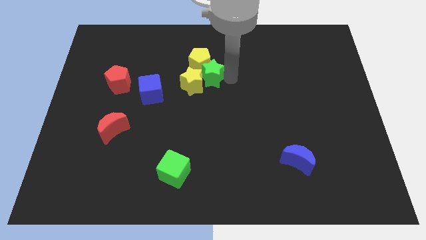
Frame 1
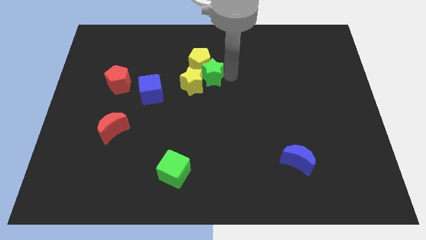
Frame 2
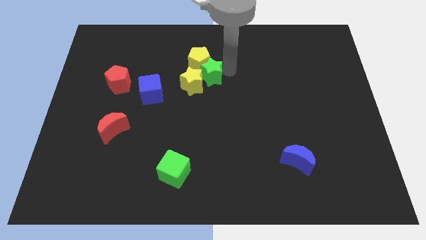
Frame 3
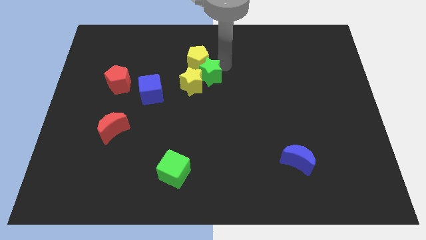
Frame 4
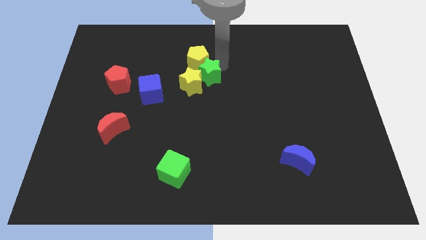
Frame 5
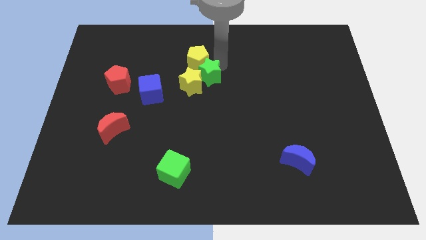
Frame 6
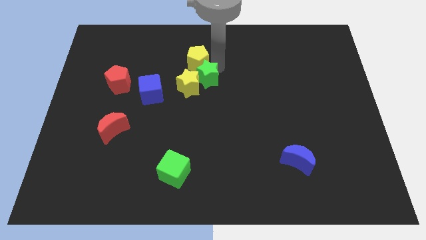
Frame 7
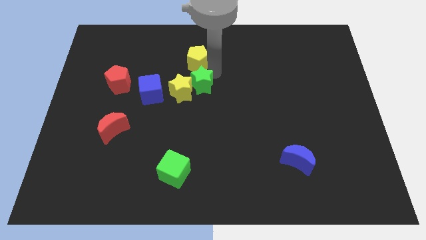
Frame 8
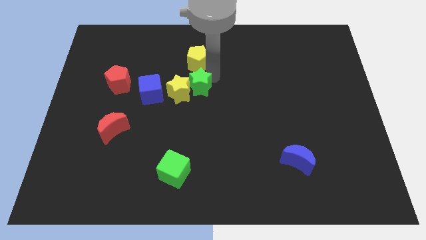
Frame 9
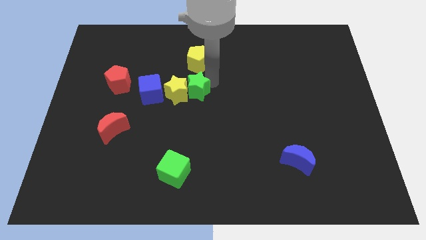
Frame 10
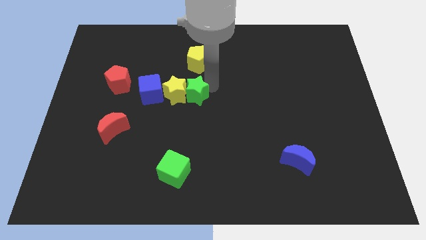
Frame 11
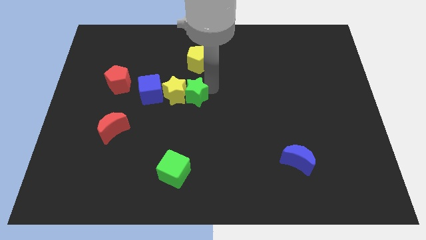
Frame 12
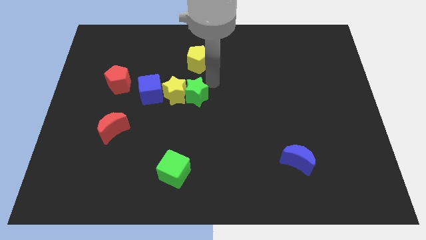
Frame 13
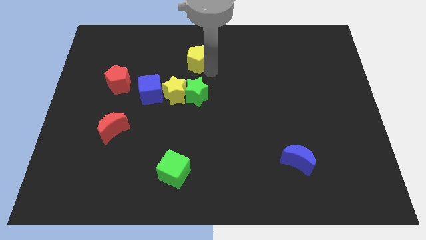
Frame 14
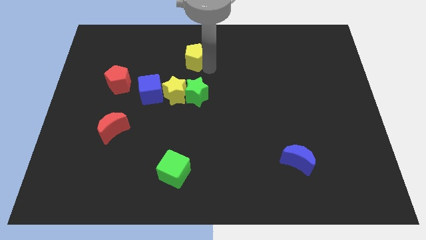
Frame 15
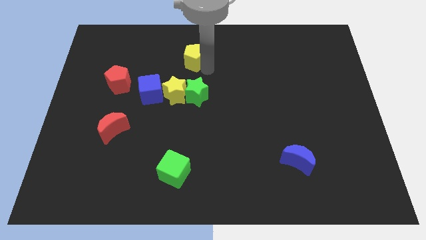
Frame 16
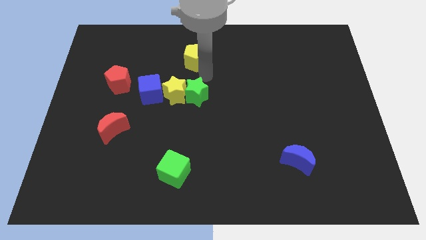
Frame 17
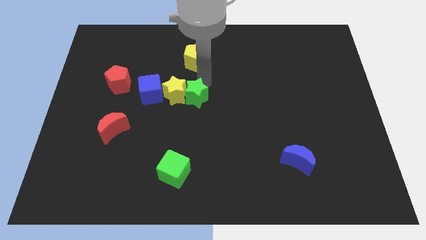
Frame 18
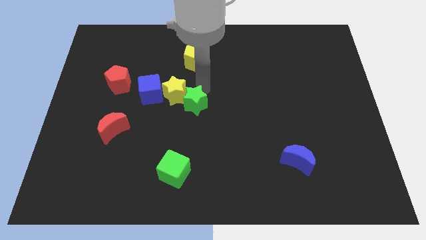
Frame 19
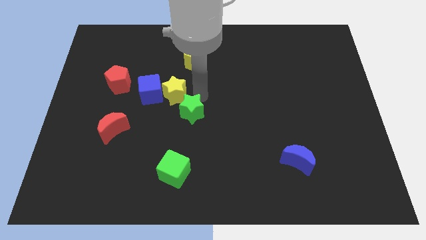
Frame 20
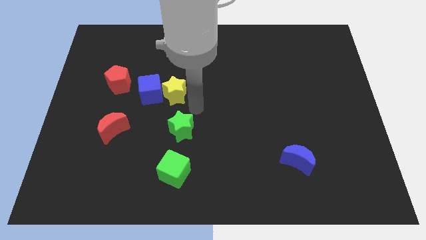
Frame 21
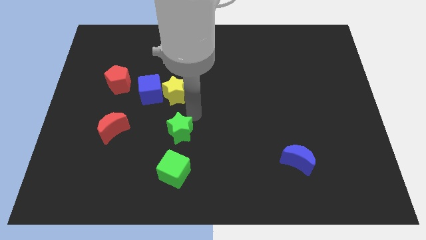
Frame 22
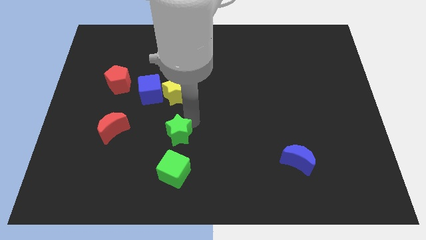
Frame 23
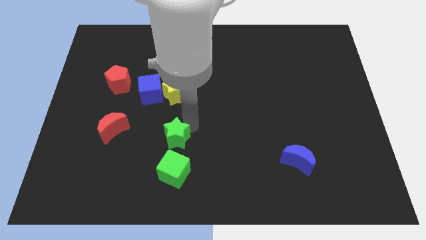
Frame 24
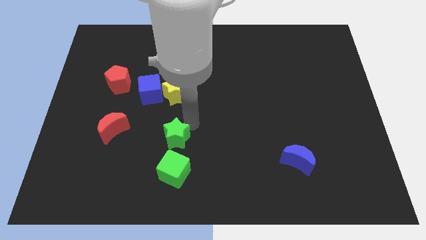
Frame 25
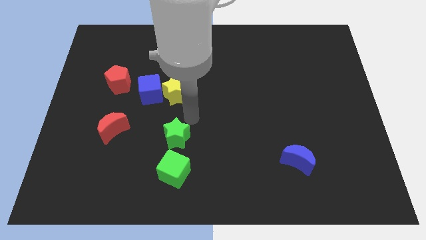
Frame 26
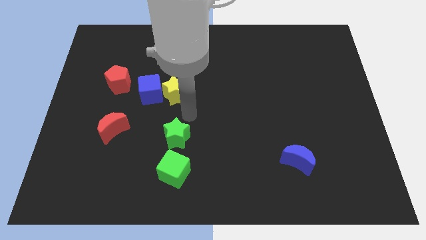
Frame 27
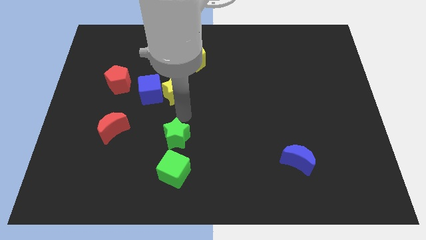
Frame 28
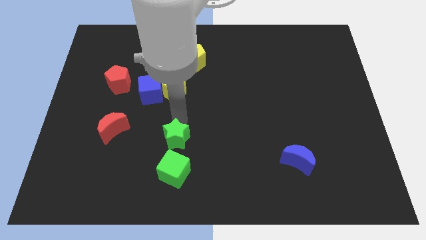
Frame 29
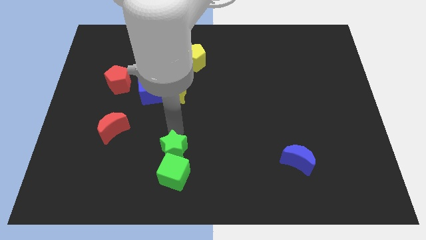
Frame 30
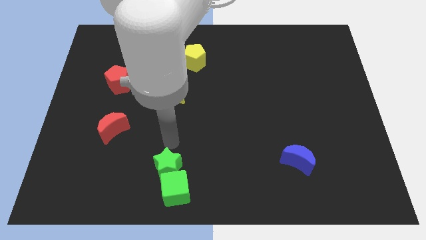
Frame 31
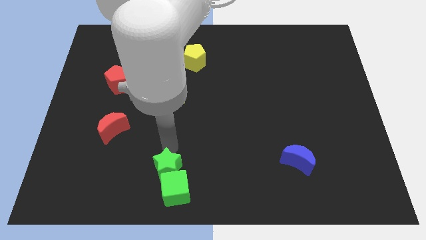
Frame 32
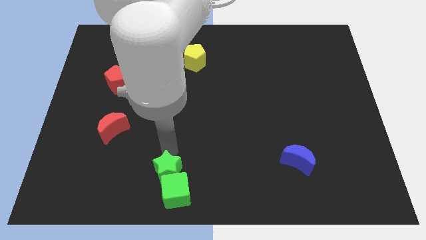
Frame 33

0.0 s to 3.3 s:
put the green star above the green cube at the bottom

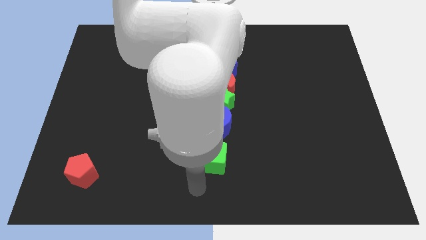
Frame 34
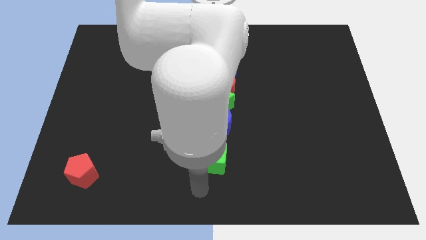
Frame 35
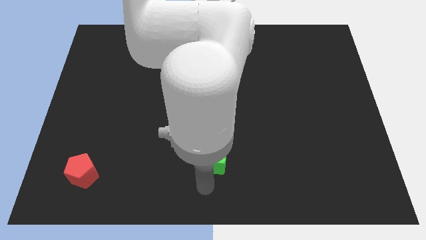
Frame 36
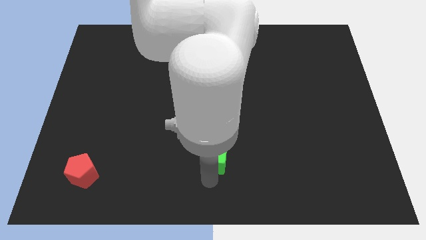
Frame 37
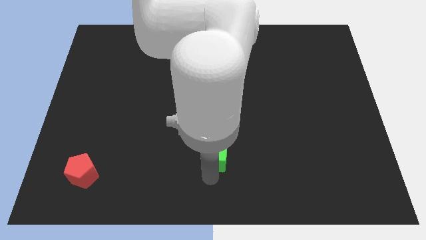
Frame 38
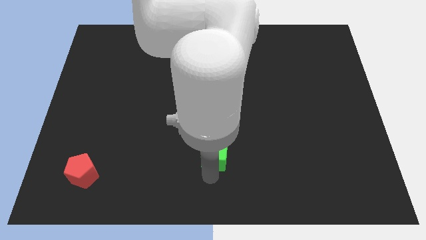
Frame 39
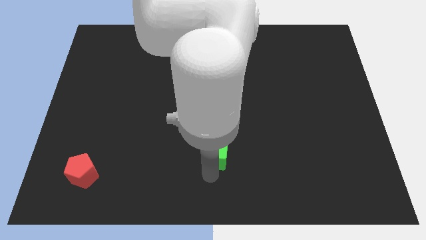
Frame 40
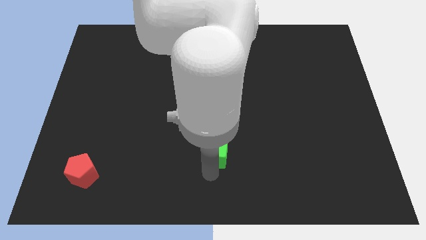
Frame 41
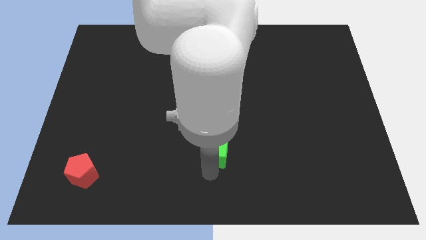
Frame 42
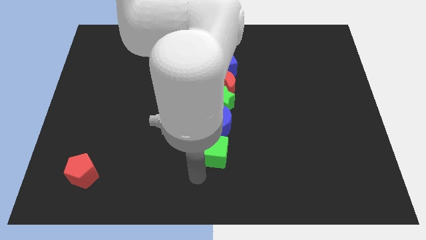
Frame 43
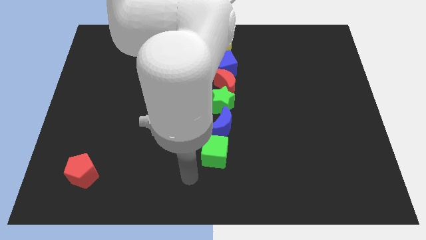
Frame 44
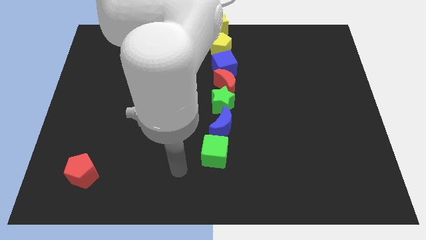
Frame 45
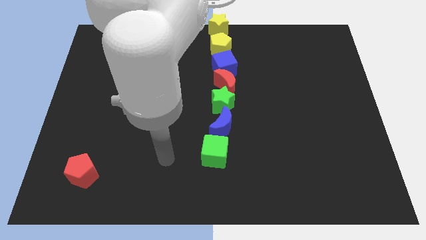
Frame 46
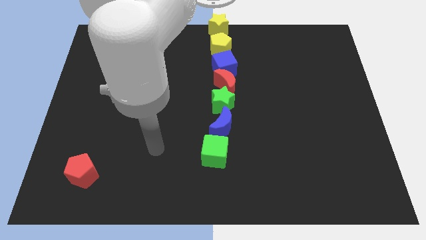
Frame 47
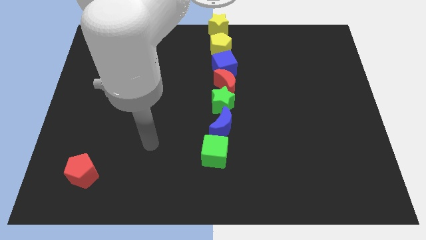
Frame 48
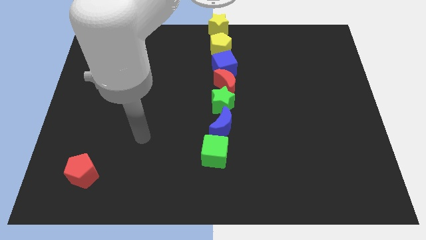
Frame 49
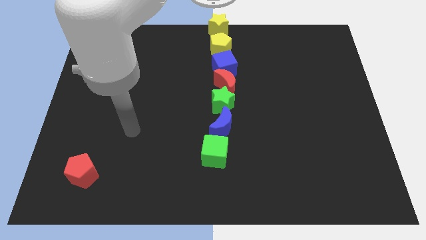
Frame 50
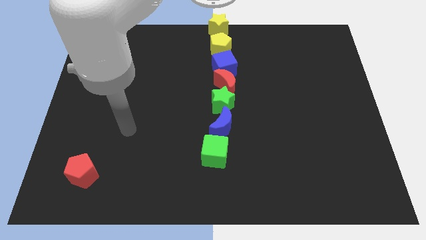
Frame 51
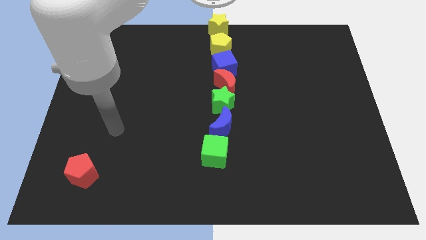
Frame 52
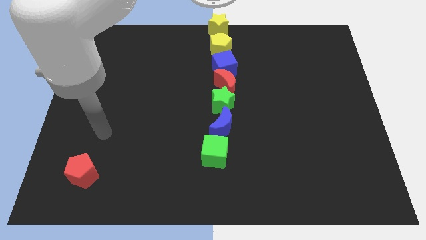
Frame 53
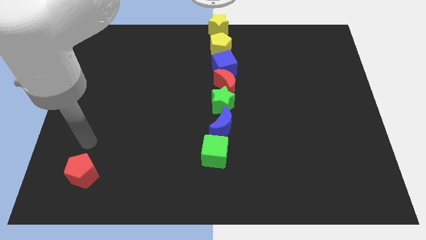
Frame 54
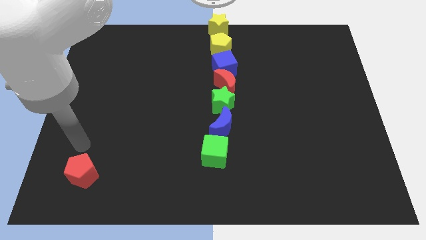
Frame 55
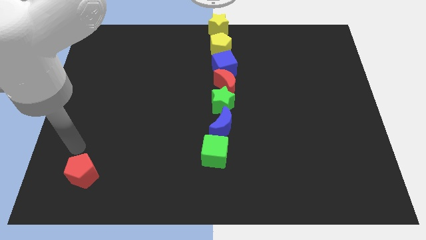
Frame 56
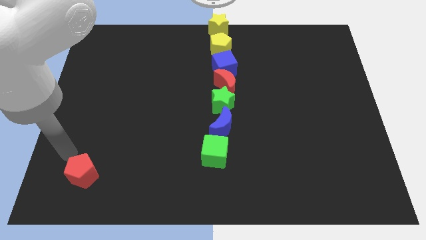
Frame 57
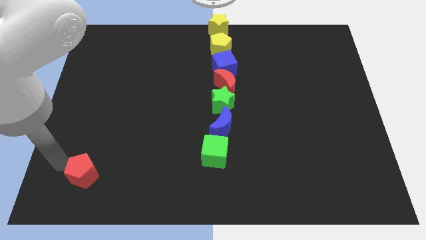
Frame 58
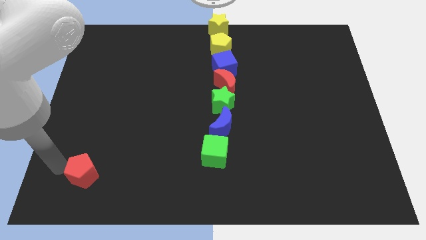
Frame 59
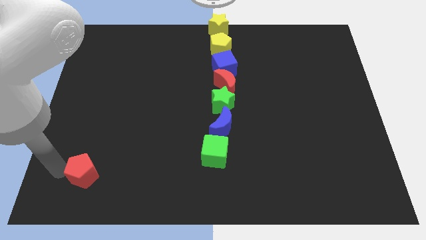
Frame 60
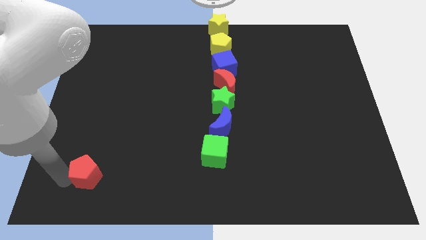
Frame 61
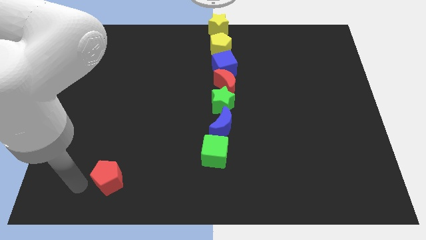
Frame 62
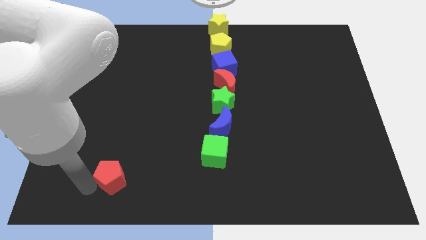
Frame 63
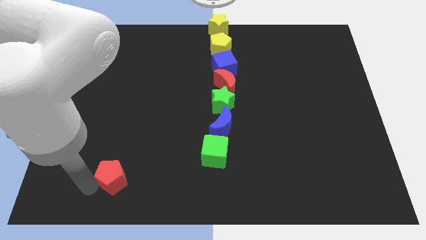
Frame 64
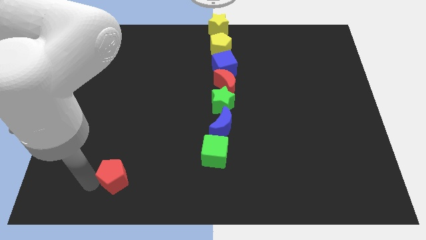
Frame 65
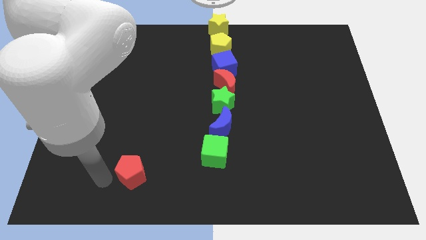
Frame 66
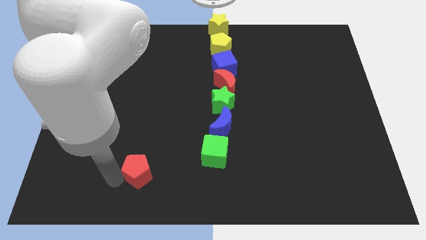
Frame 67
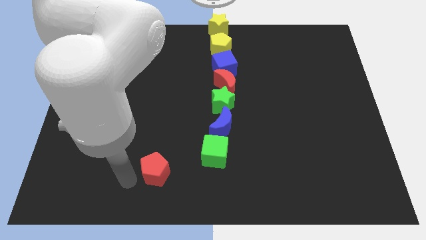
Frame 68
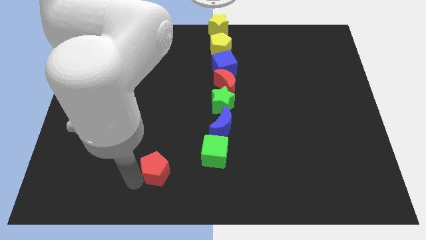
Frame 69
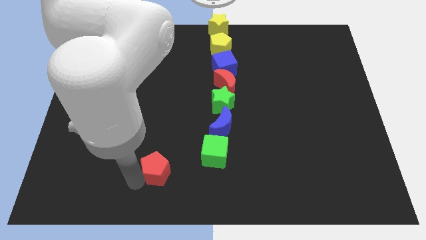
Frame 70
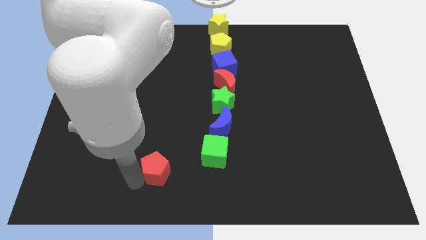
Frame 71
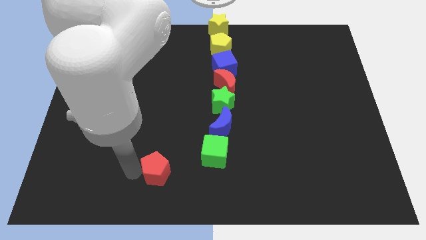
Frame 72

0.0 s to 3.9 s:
push the red pentagon to the right

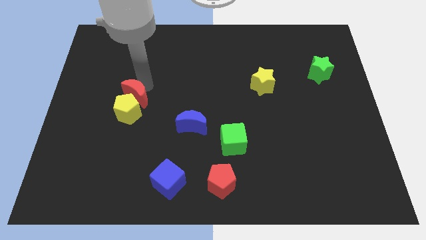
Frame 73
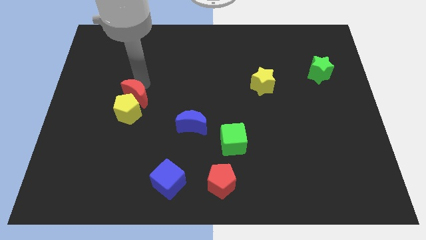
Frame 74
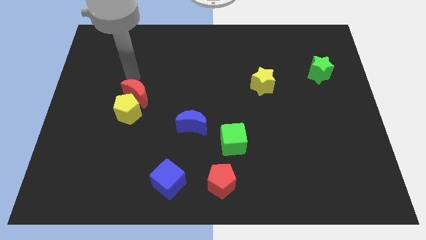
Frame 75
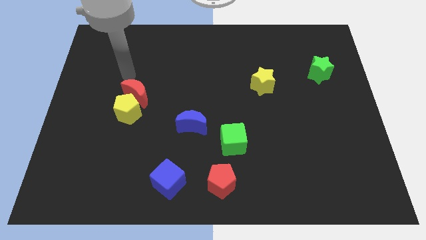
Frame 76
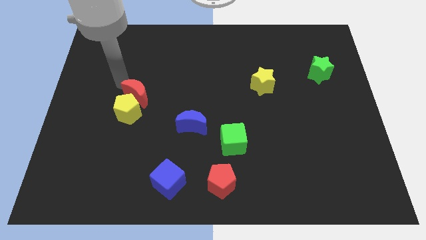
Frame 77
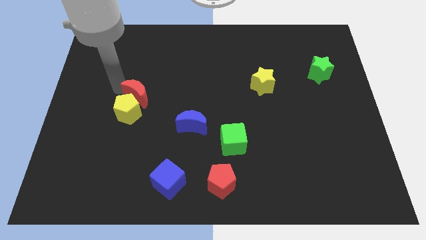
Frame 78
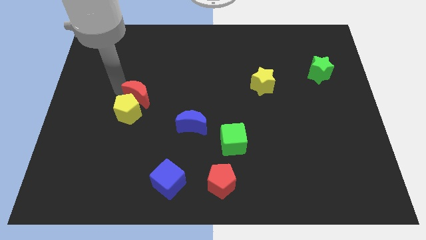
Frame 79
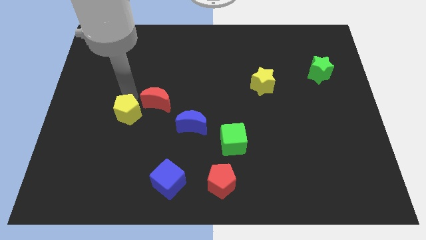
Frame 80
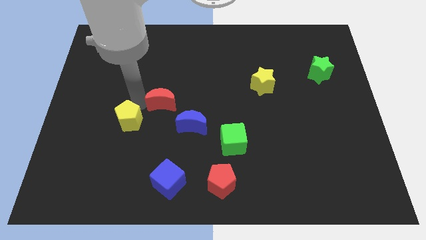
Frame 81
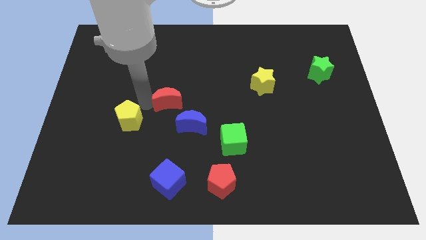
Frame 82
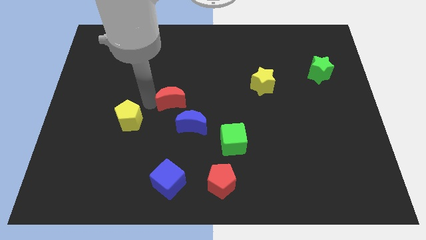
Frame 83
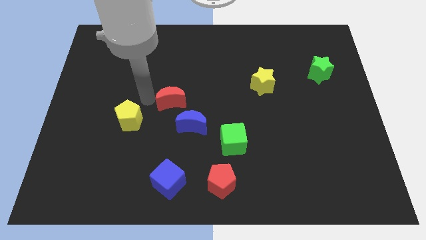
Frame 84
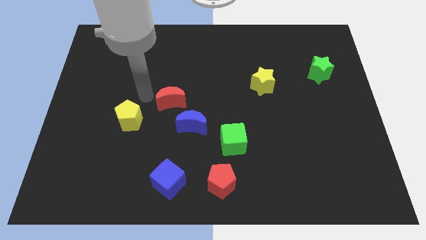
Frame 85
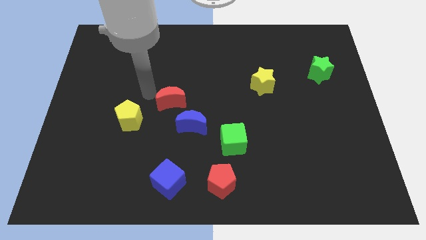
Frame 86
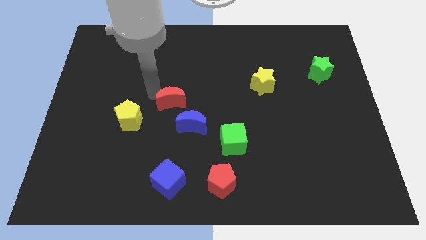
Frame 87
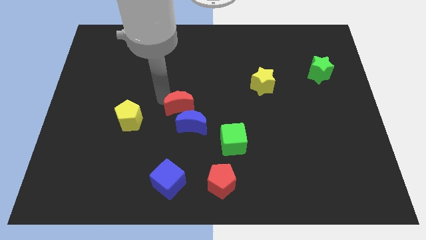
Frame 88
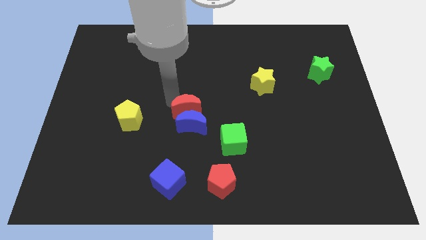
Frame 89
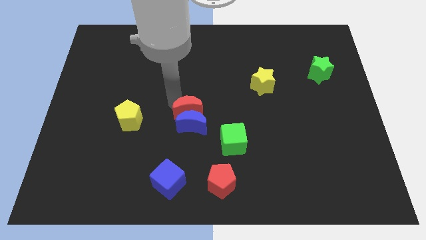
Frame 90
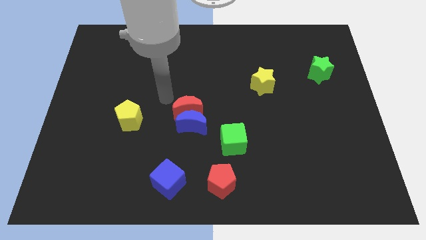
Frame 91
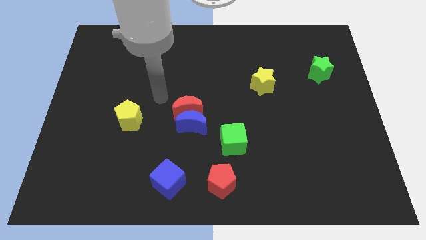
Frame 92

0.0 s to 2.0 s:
separate red moon from the yellow pentagon
